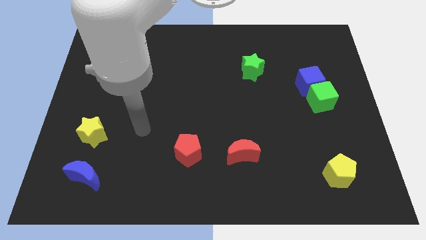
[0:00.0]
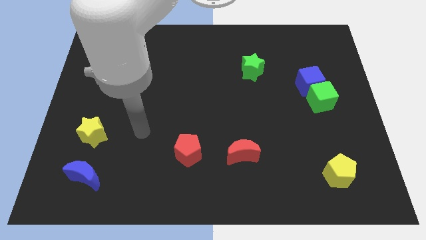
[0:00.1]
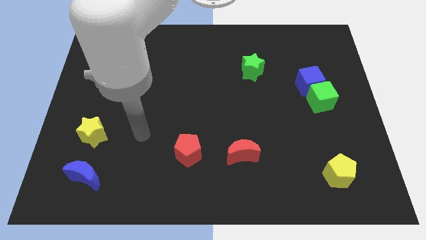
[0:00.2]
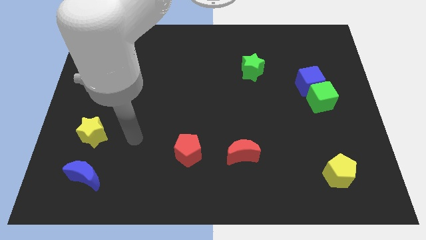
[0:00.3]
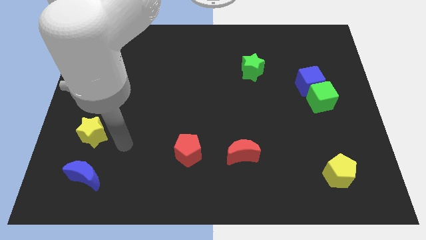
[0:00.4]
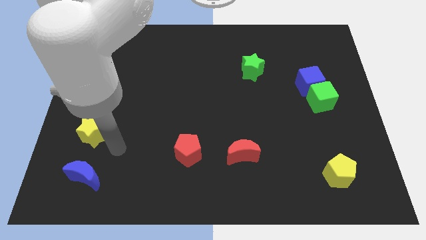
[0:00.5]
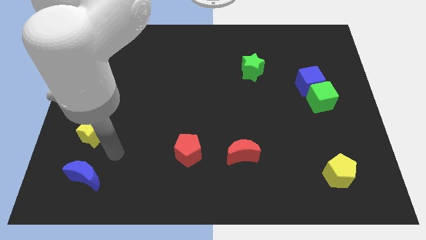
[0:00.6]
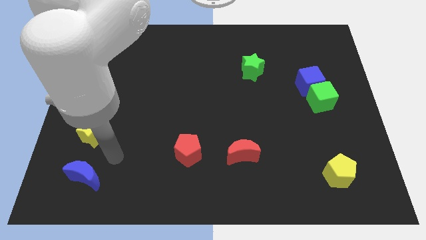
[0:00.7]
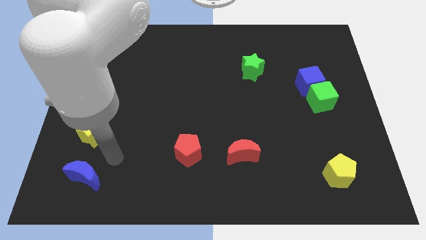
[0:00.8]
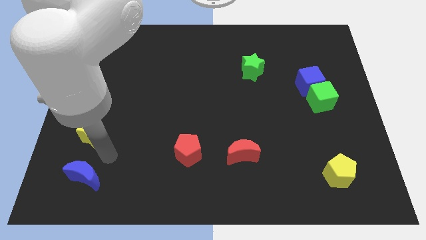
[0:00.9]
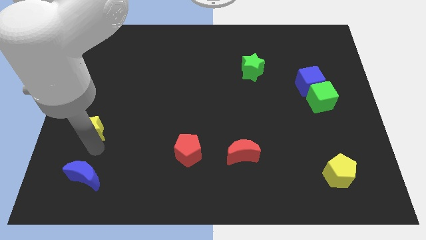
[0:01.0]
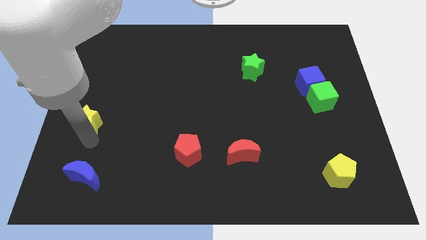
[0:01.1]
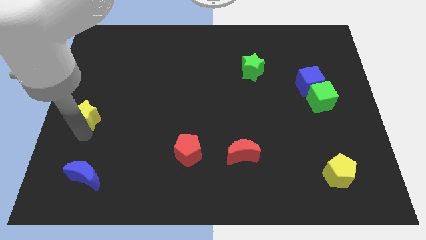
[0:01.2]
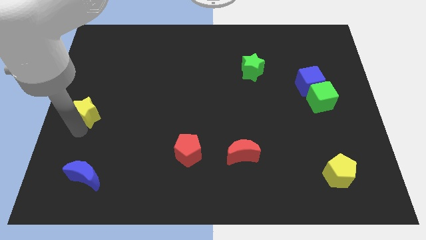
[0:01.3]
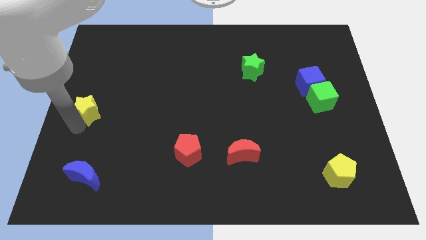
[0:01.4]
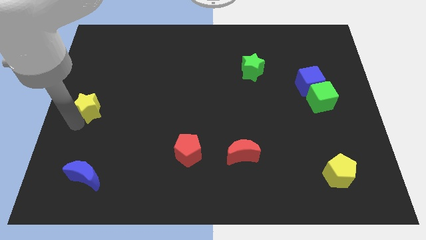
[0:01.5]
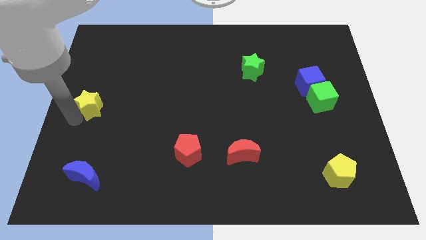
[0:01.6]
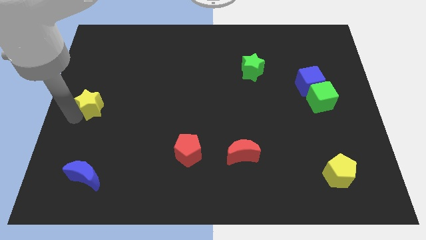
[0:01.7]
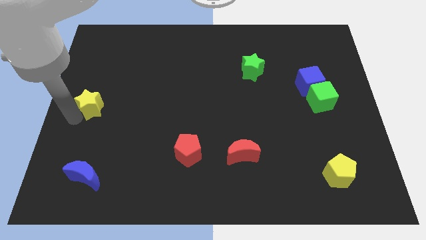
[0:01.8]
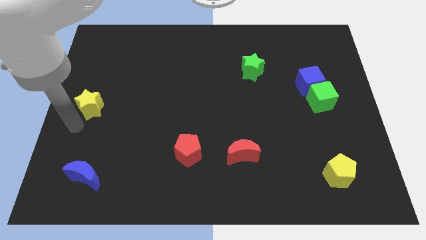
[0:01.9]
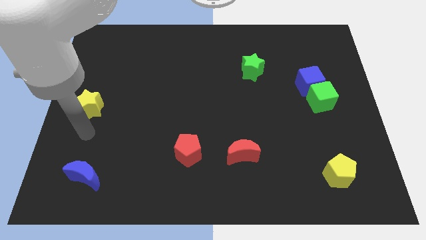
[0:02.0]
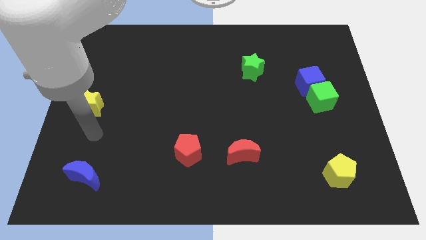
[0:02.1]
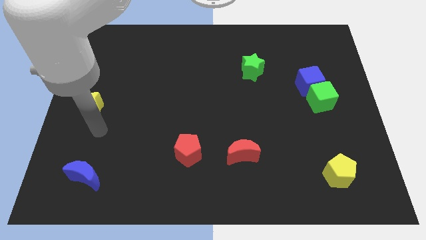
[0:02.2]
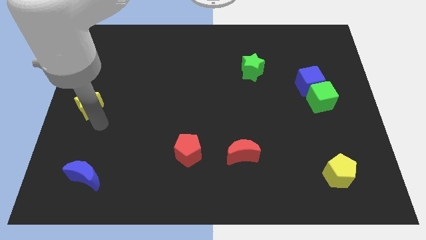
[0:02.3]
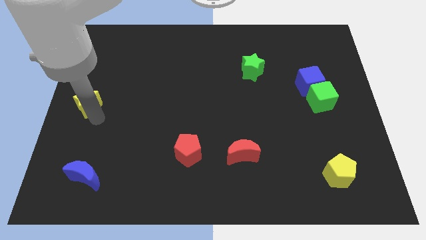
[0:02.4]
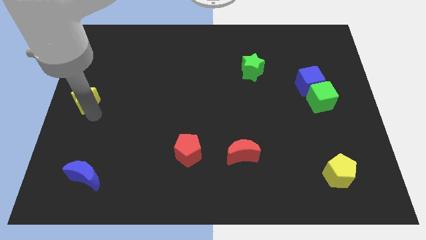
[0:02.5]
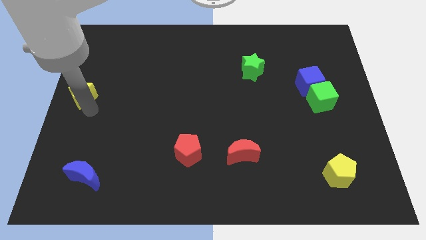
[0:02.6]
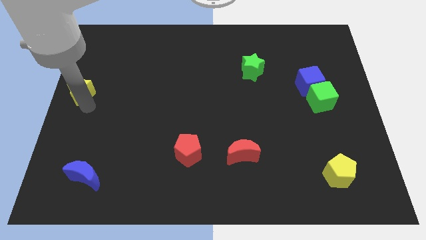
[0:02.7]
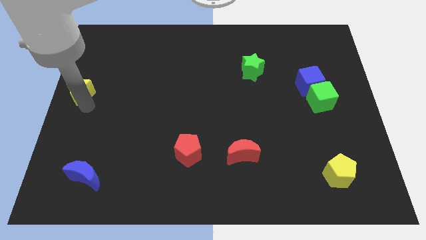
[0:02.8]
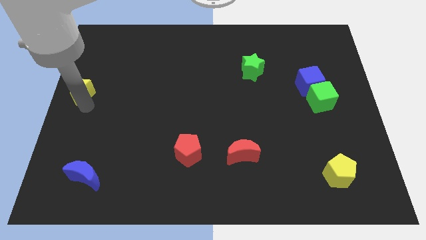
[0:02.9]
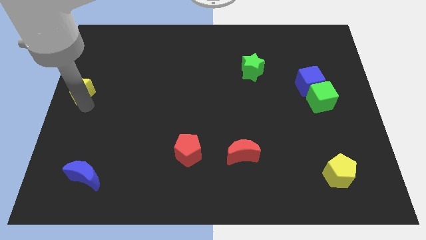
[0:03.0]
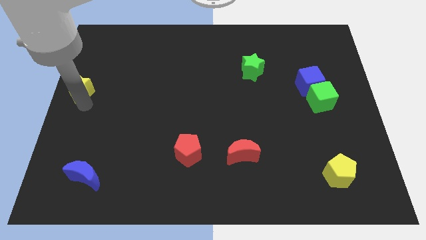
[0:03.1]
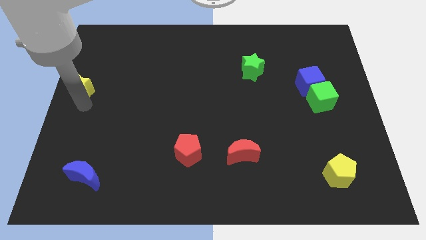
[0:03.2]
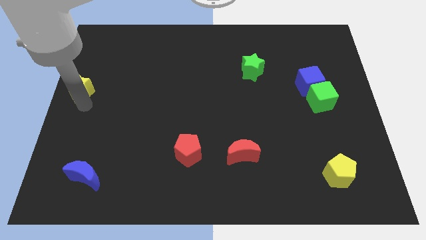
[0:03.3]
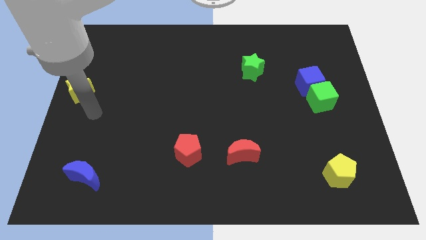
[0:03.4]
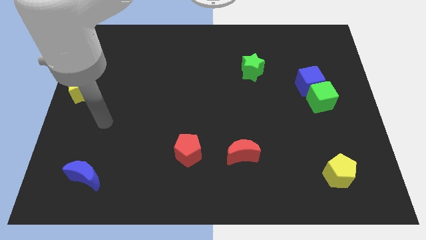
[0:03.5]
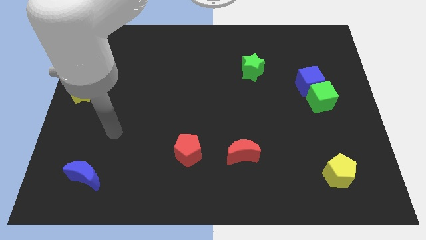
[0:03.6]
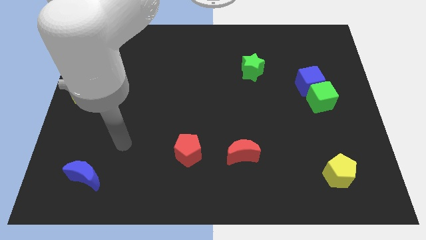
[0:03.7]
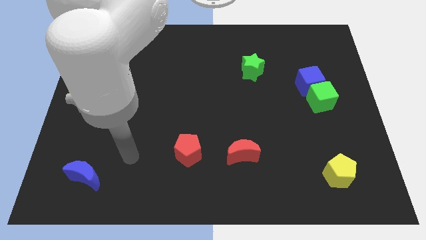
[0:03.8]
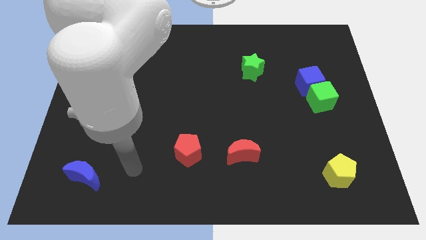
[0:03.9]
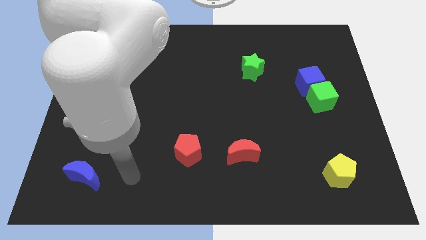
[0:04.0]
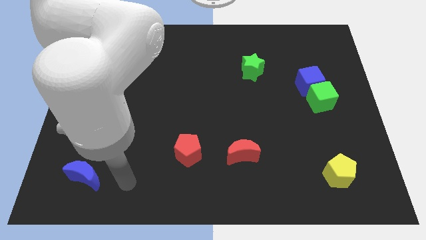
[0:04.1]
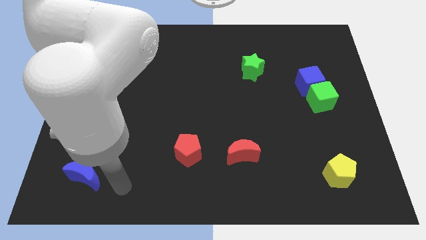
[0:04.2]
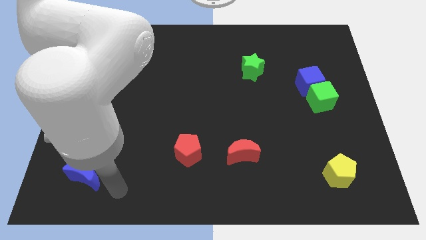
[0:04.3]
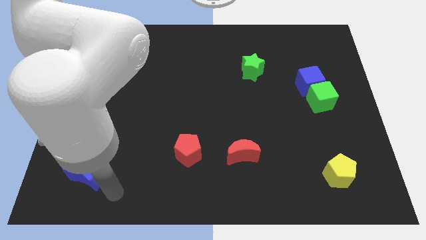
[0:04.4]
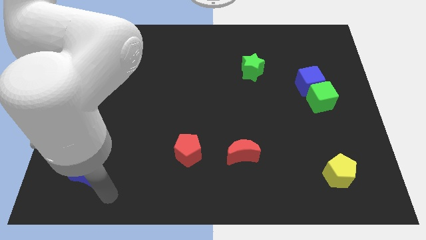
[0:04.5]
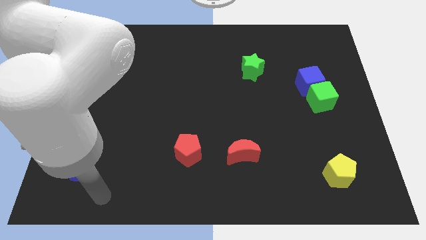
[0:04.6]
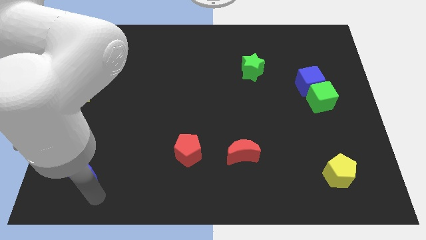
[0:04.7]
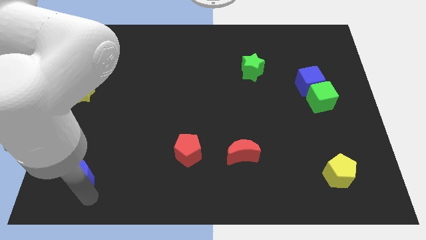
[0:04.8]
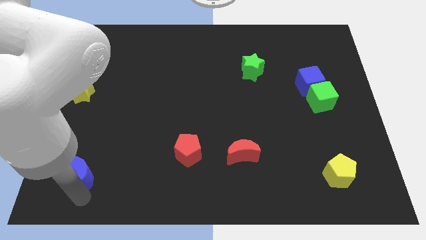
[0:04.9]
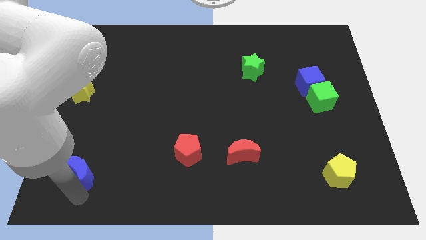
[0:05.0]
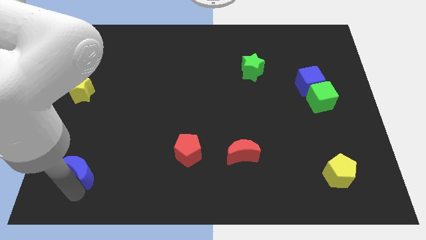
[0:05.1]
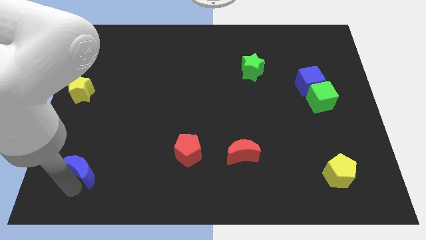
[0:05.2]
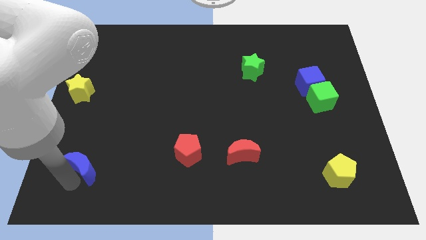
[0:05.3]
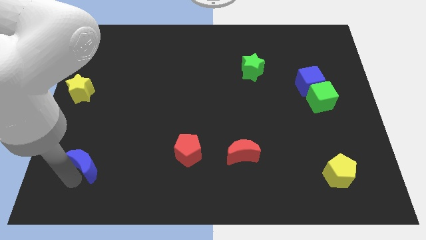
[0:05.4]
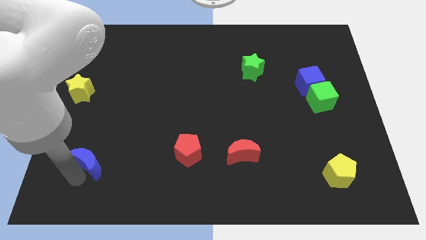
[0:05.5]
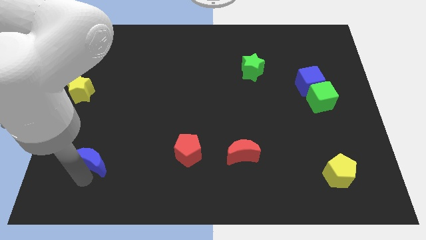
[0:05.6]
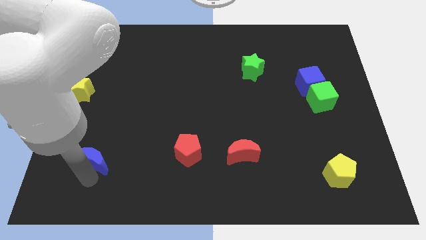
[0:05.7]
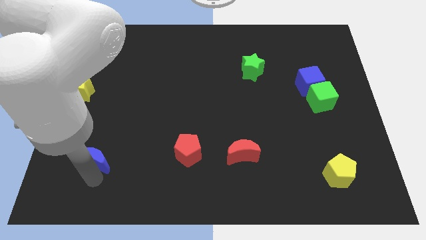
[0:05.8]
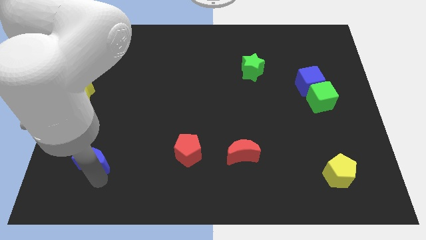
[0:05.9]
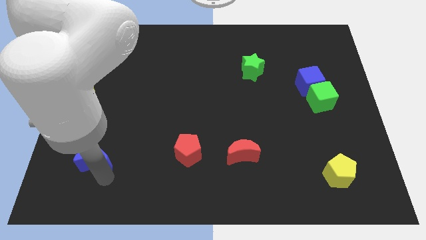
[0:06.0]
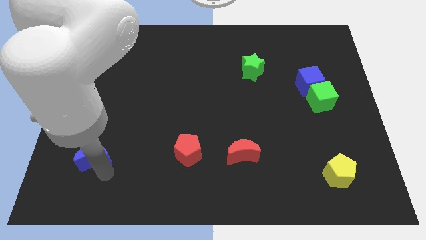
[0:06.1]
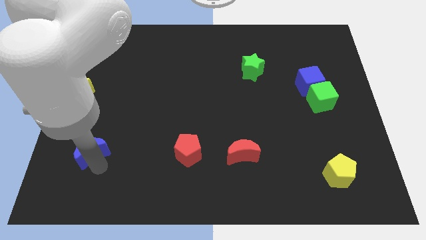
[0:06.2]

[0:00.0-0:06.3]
push the blue moon to the left of the red pentagon

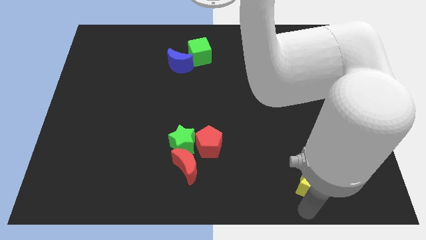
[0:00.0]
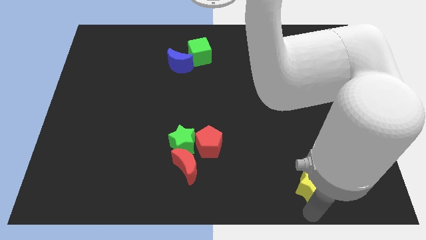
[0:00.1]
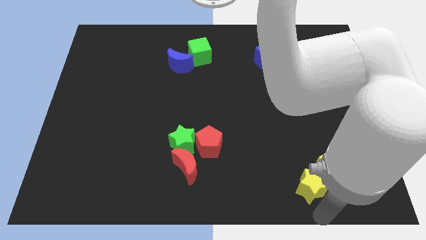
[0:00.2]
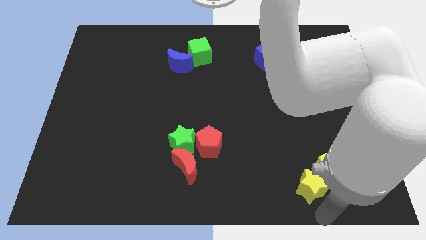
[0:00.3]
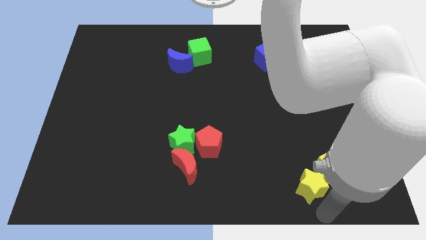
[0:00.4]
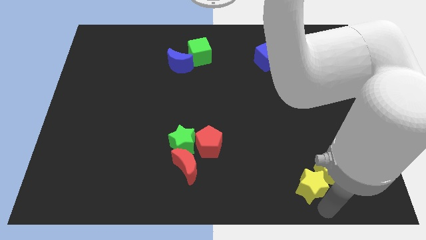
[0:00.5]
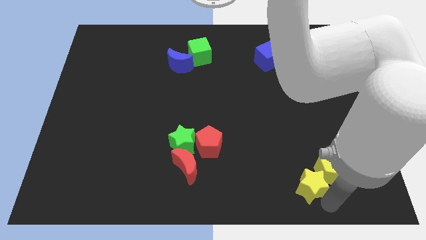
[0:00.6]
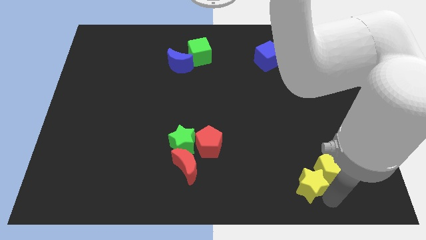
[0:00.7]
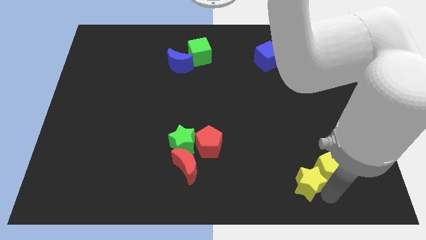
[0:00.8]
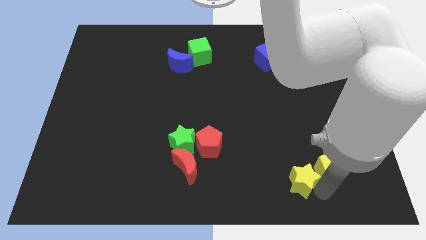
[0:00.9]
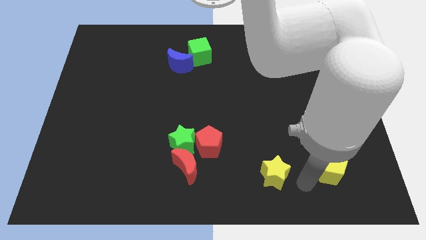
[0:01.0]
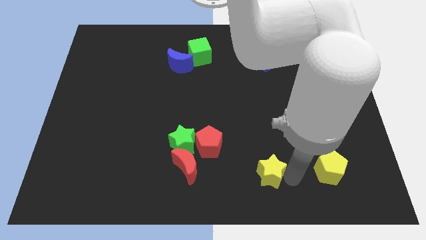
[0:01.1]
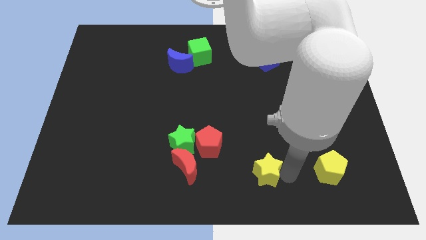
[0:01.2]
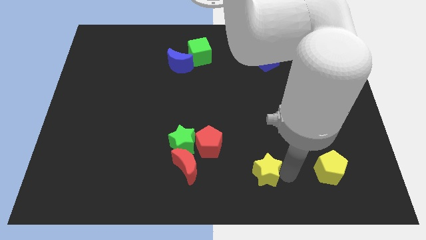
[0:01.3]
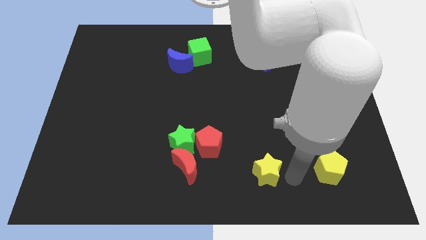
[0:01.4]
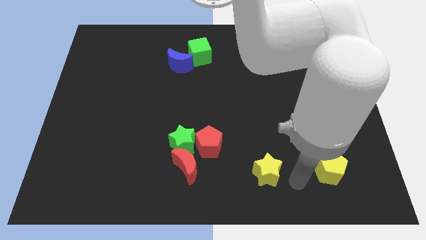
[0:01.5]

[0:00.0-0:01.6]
separate yellow star and yellow pentagon

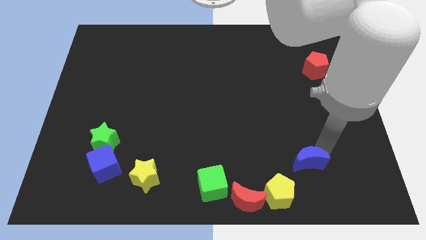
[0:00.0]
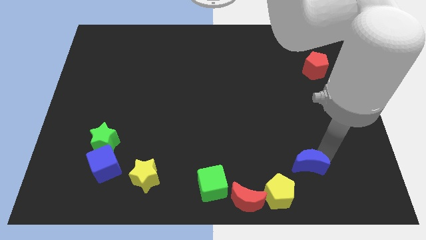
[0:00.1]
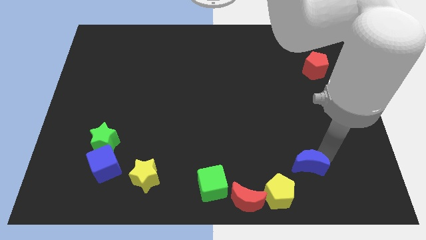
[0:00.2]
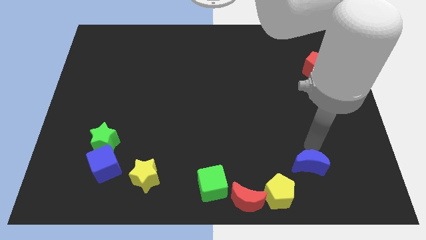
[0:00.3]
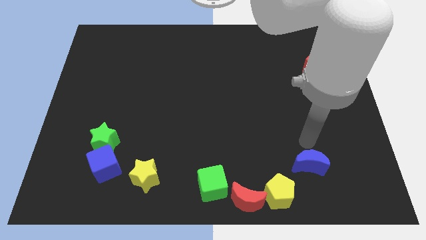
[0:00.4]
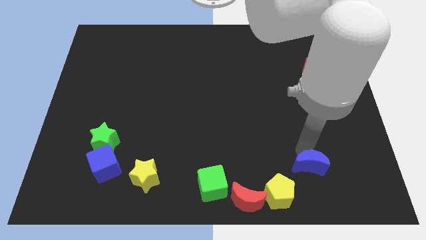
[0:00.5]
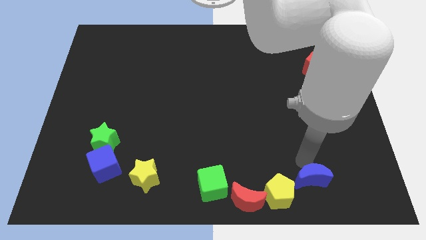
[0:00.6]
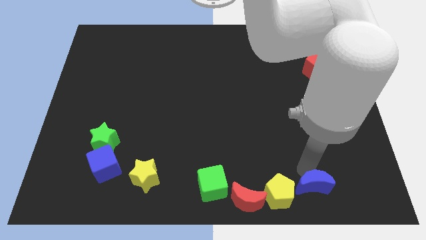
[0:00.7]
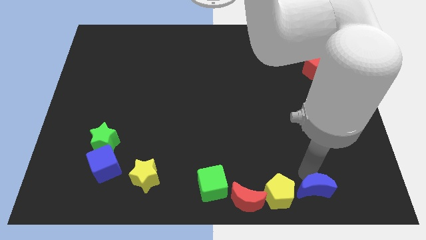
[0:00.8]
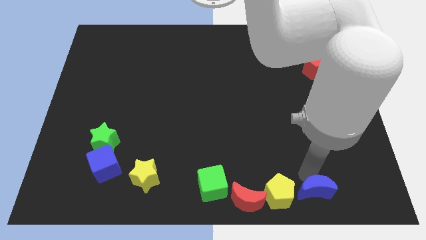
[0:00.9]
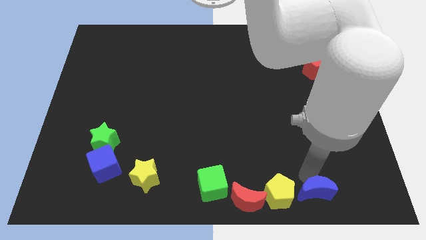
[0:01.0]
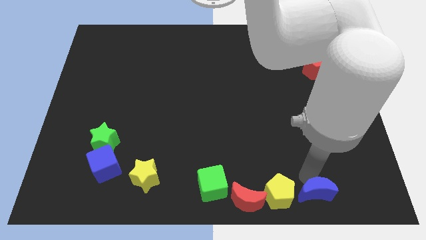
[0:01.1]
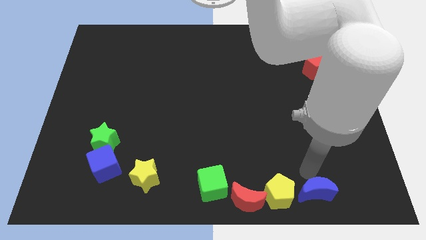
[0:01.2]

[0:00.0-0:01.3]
push blue moon on right side of the yellow pentagon
